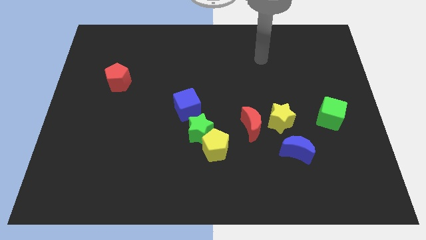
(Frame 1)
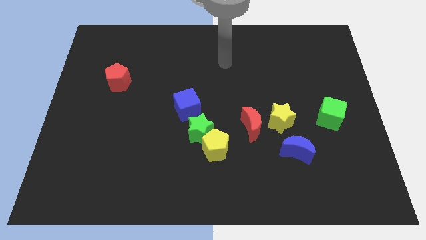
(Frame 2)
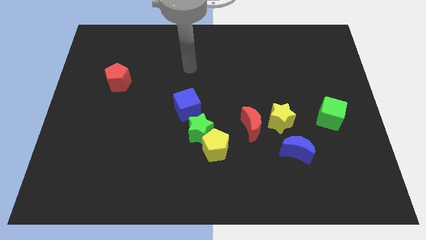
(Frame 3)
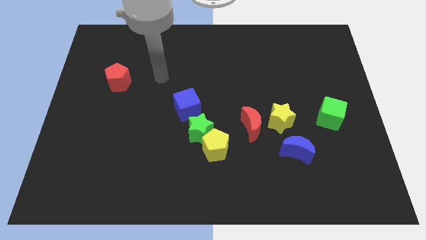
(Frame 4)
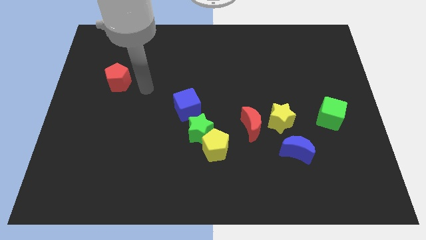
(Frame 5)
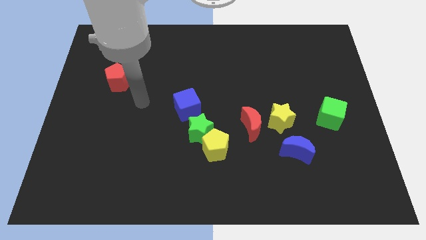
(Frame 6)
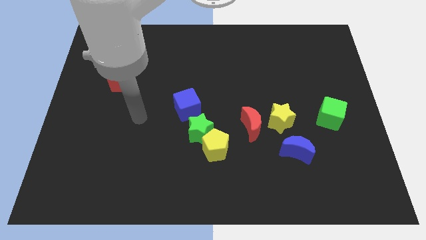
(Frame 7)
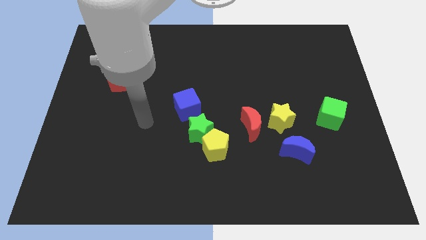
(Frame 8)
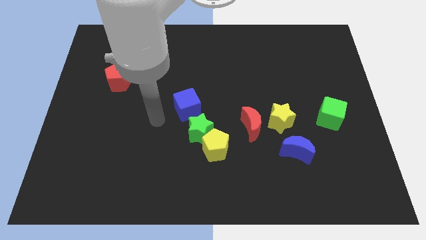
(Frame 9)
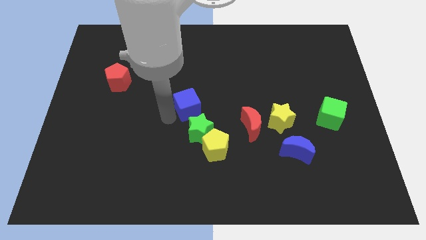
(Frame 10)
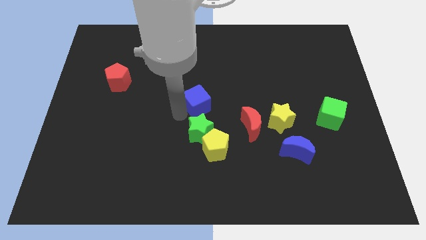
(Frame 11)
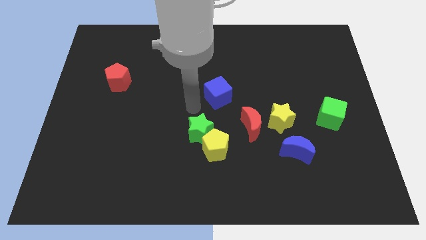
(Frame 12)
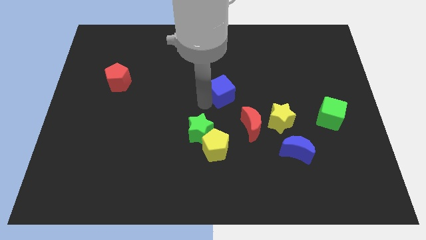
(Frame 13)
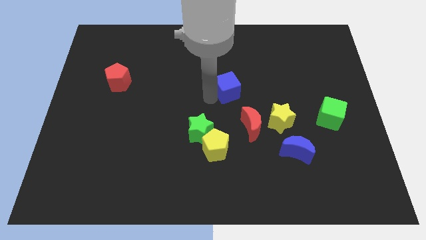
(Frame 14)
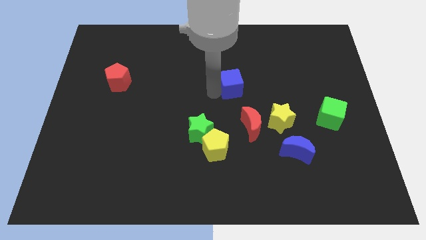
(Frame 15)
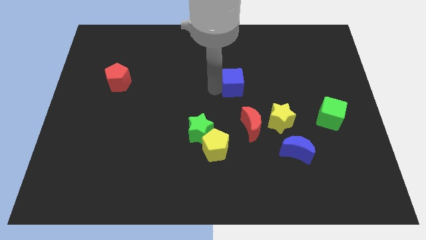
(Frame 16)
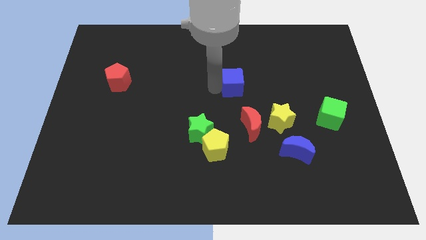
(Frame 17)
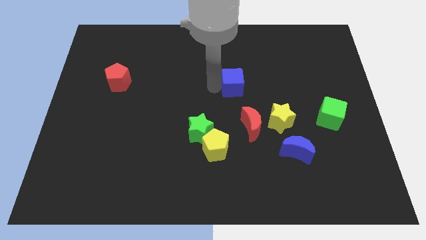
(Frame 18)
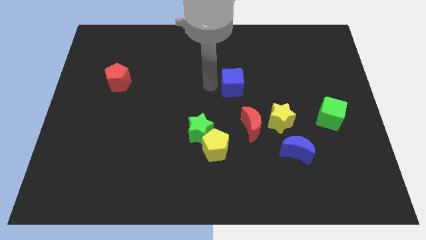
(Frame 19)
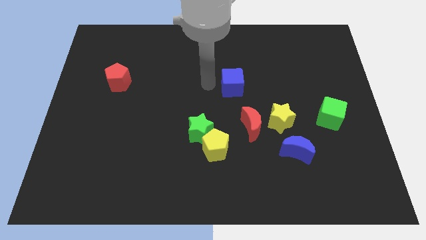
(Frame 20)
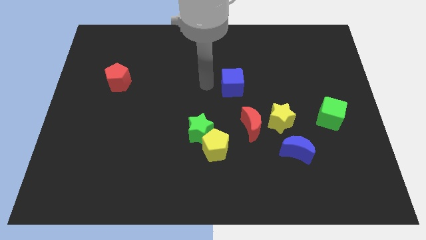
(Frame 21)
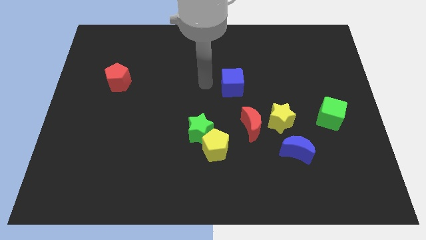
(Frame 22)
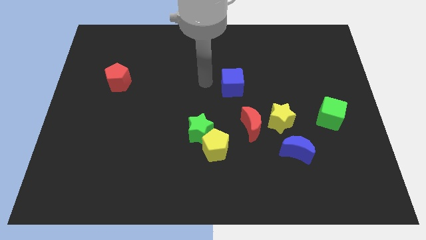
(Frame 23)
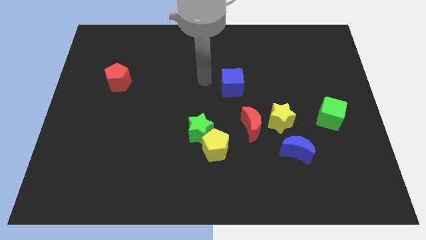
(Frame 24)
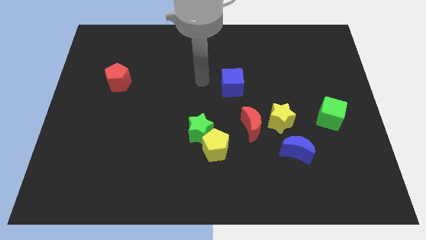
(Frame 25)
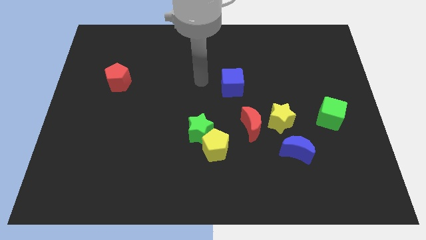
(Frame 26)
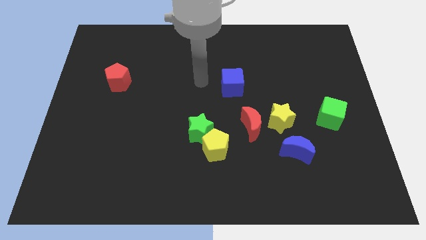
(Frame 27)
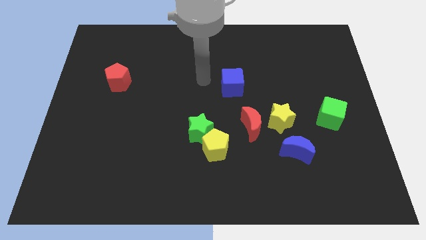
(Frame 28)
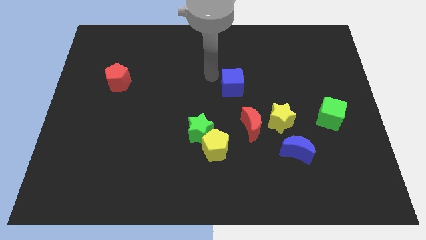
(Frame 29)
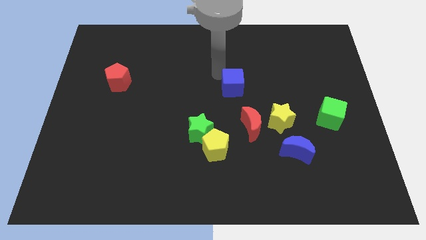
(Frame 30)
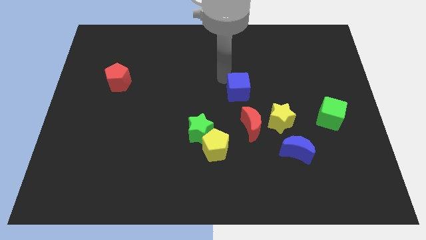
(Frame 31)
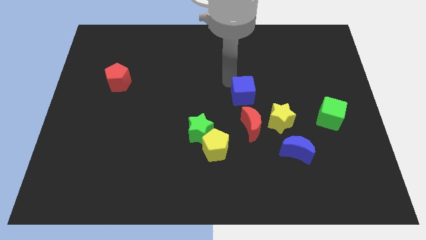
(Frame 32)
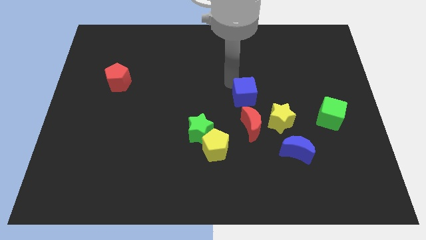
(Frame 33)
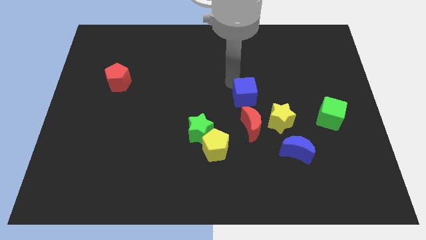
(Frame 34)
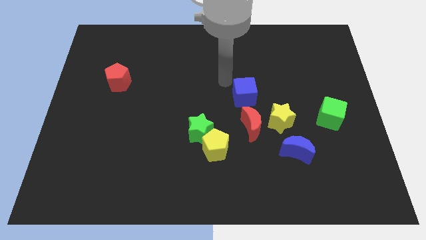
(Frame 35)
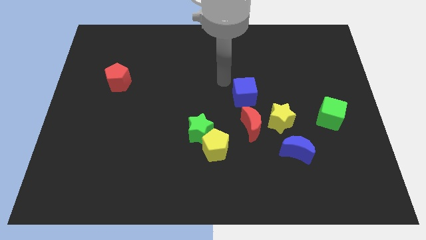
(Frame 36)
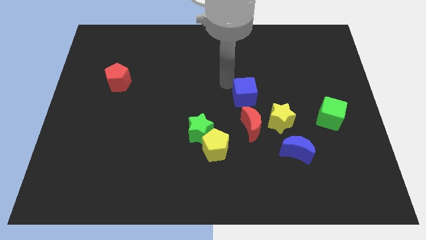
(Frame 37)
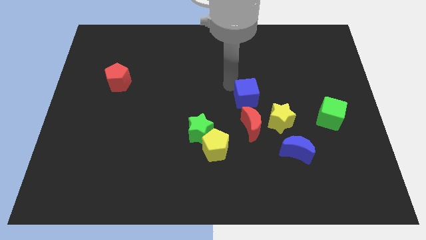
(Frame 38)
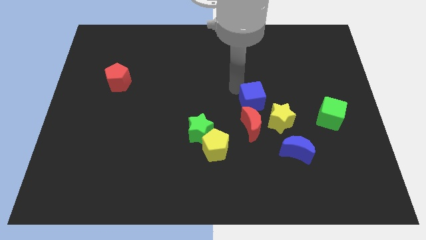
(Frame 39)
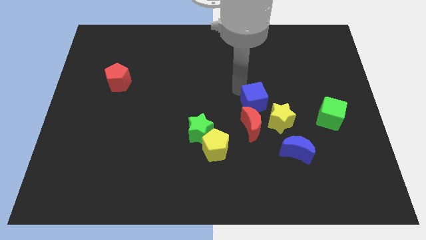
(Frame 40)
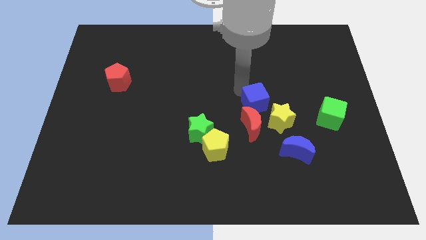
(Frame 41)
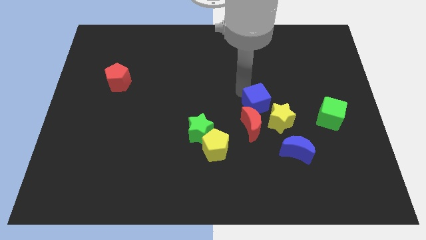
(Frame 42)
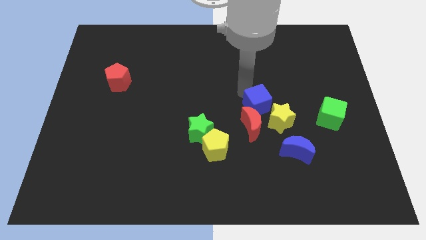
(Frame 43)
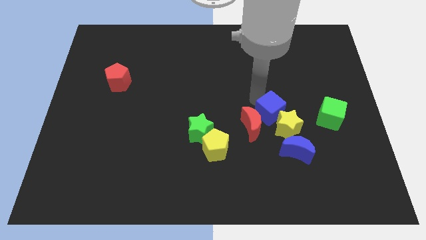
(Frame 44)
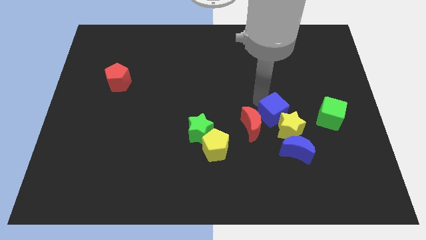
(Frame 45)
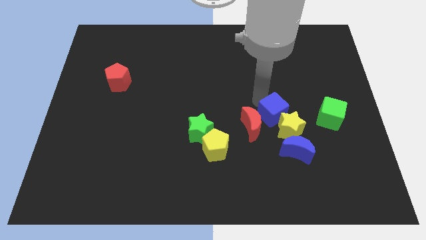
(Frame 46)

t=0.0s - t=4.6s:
slide the blue cube close to the yellow star

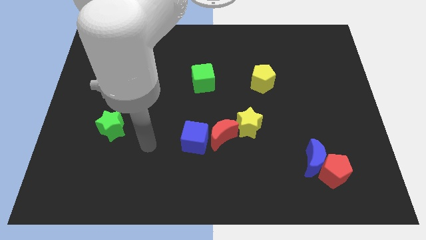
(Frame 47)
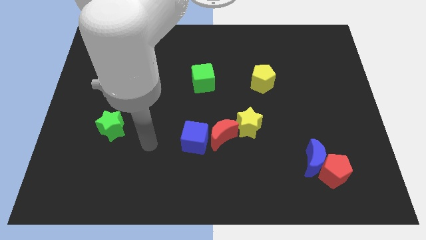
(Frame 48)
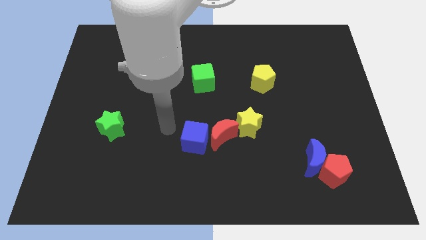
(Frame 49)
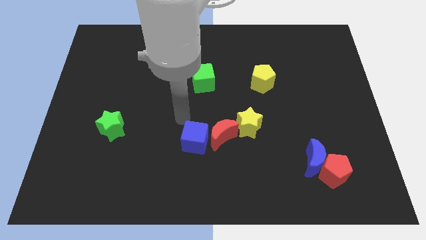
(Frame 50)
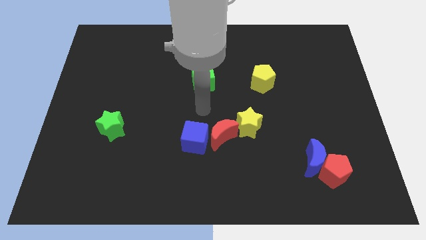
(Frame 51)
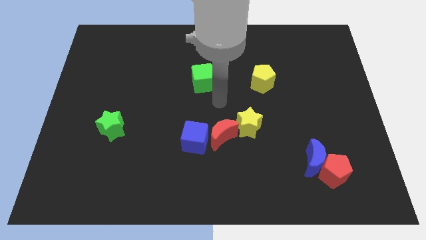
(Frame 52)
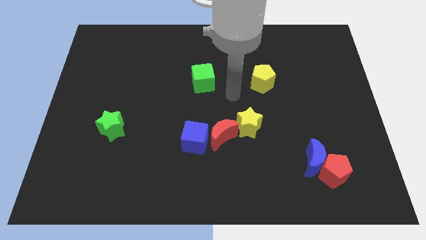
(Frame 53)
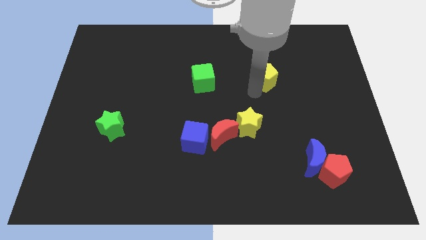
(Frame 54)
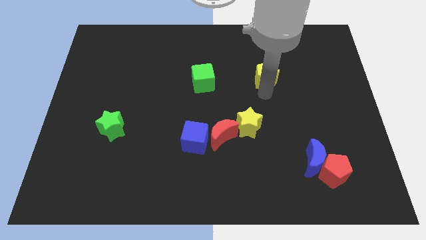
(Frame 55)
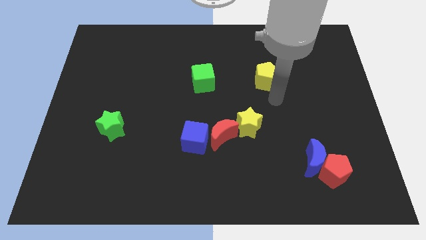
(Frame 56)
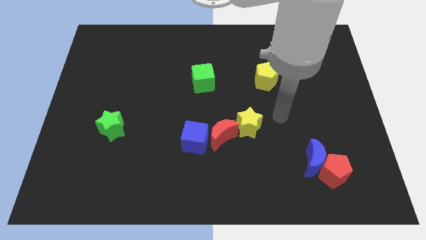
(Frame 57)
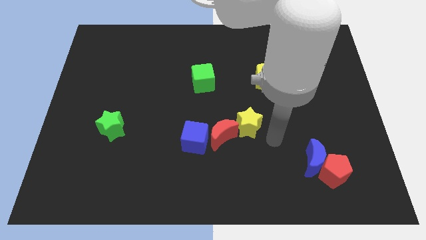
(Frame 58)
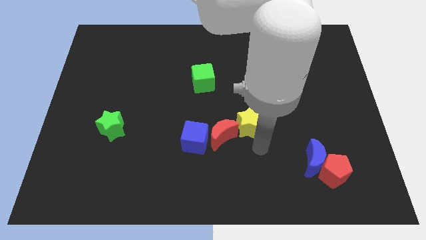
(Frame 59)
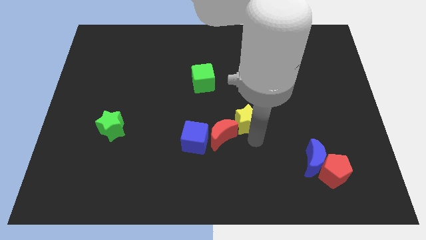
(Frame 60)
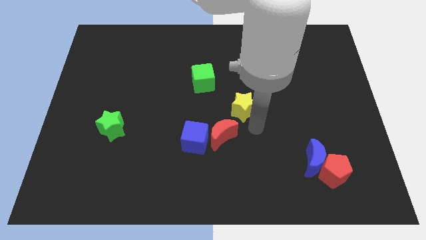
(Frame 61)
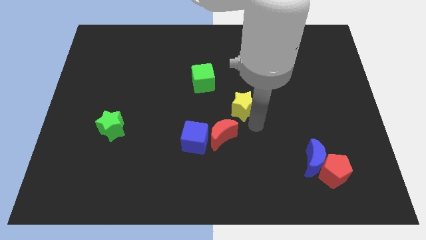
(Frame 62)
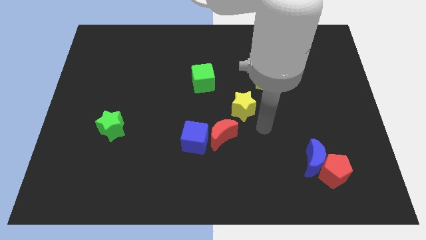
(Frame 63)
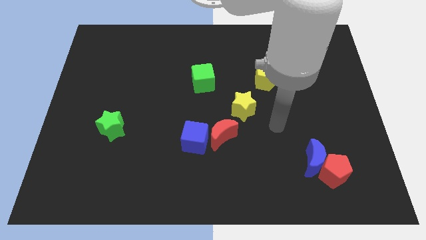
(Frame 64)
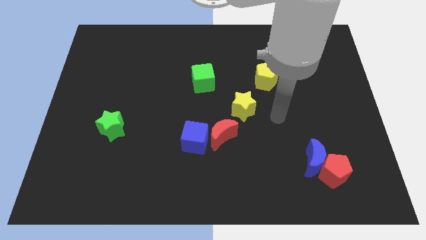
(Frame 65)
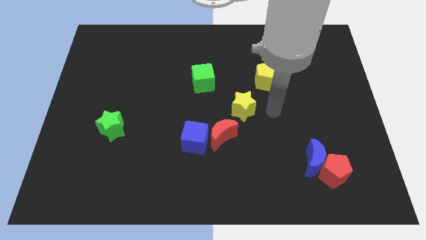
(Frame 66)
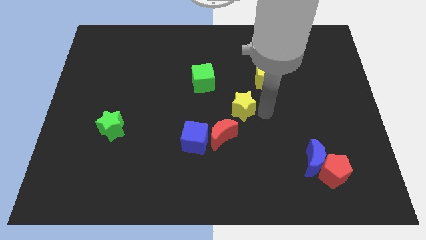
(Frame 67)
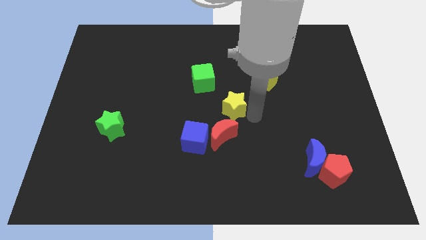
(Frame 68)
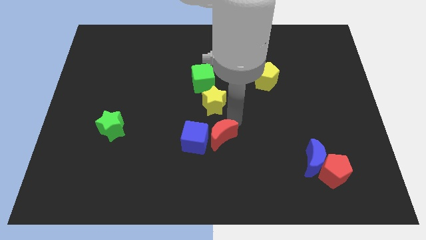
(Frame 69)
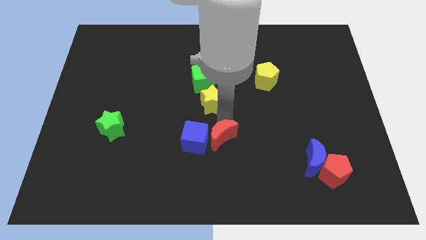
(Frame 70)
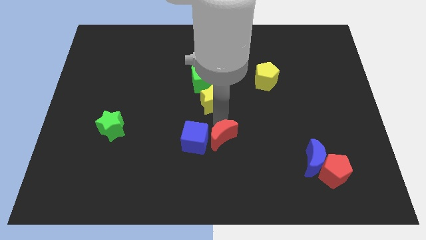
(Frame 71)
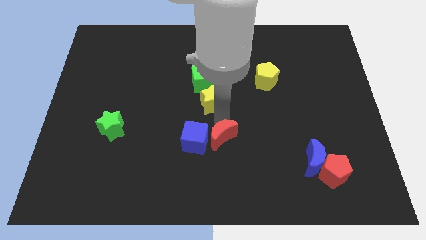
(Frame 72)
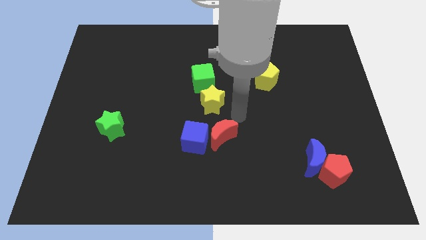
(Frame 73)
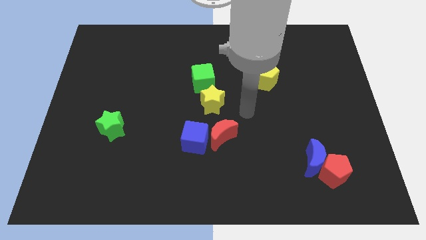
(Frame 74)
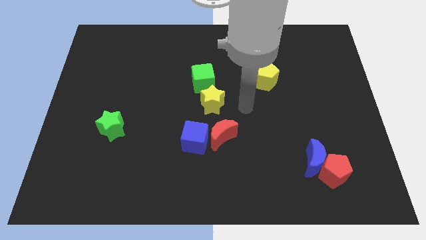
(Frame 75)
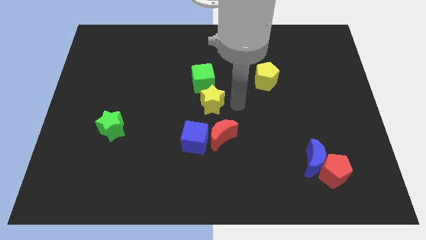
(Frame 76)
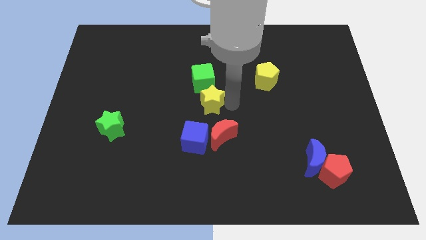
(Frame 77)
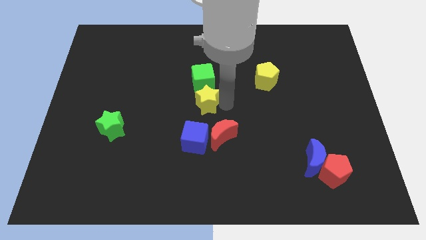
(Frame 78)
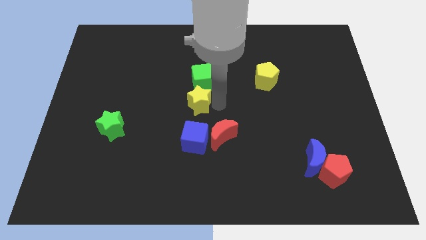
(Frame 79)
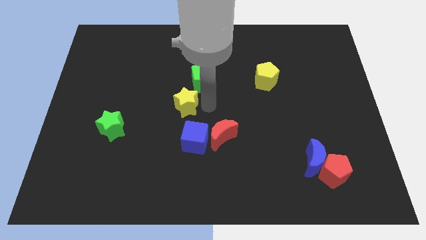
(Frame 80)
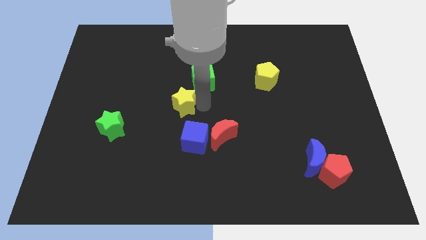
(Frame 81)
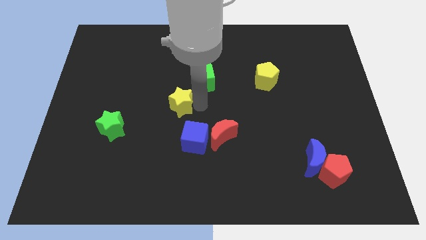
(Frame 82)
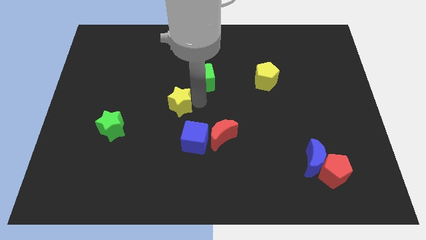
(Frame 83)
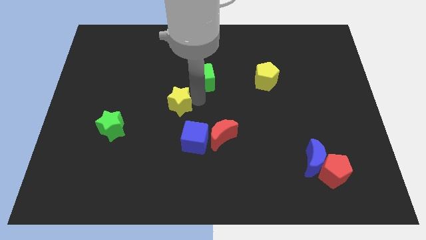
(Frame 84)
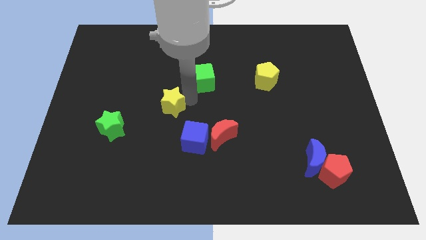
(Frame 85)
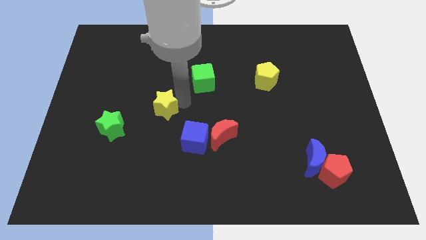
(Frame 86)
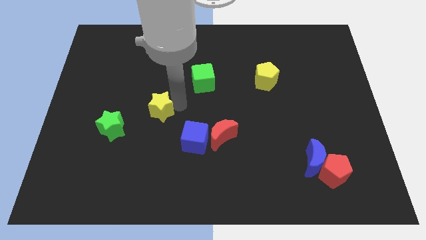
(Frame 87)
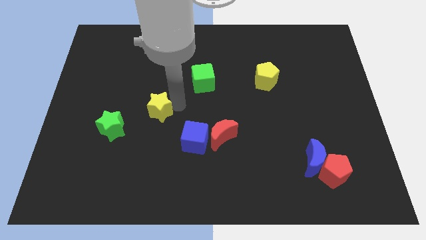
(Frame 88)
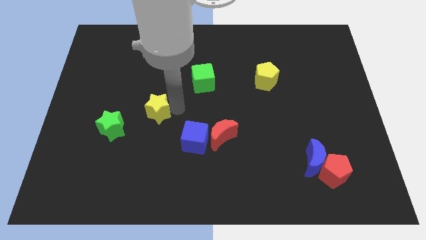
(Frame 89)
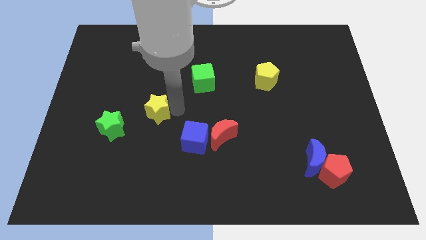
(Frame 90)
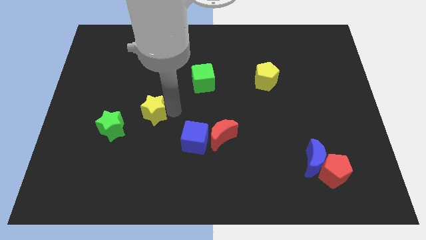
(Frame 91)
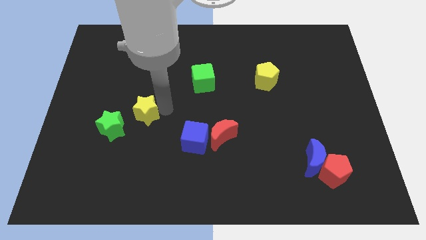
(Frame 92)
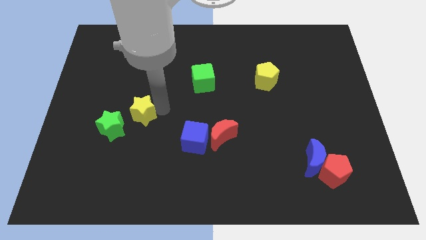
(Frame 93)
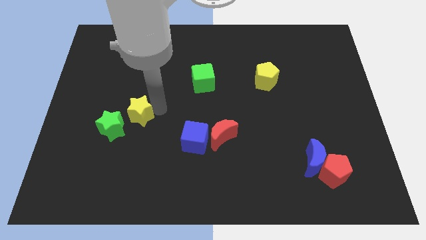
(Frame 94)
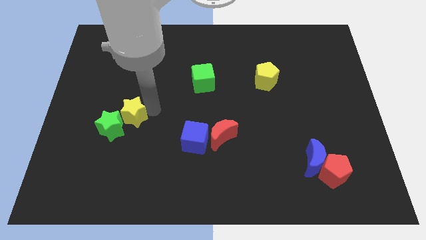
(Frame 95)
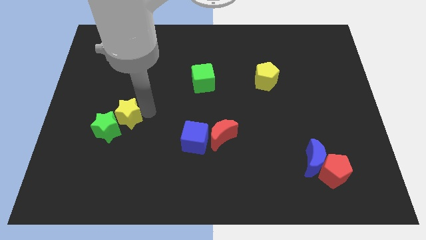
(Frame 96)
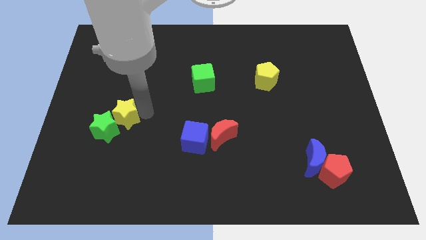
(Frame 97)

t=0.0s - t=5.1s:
push the yellow star to the green star
